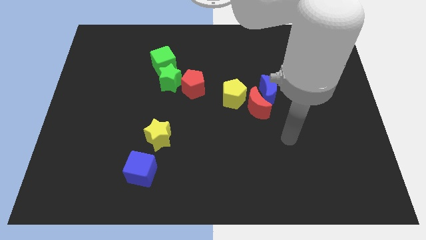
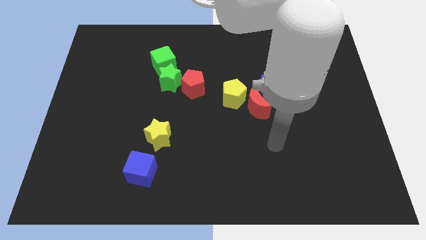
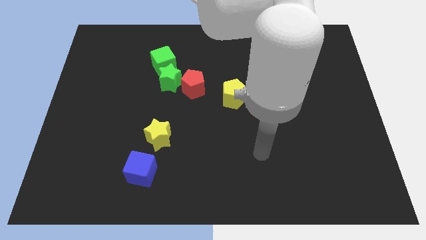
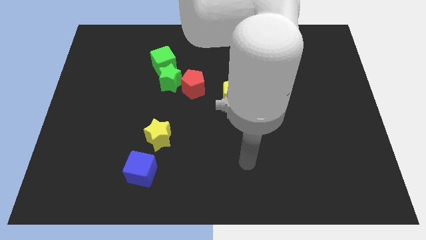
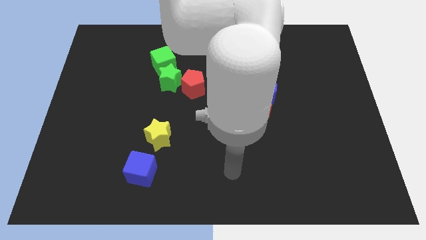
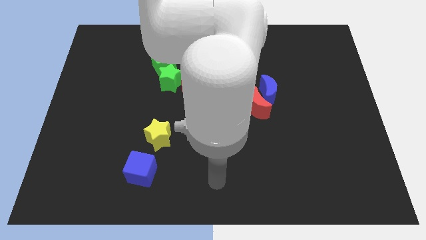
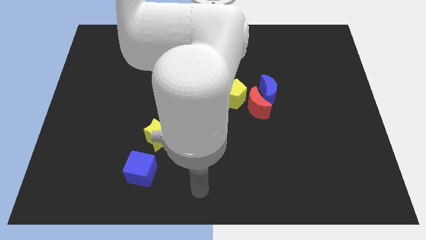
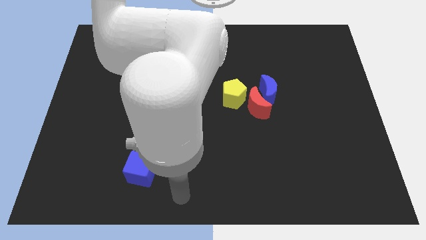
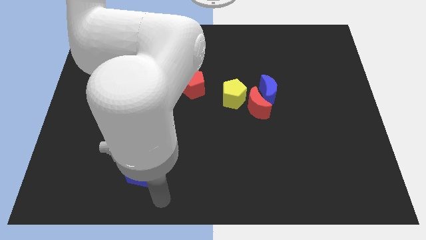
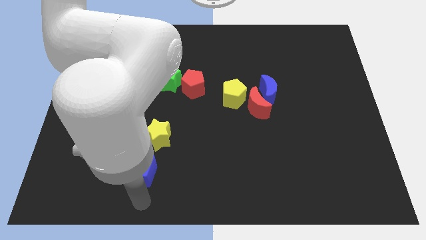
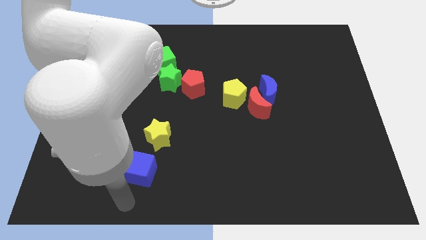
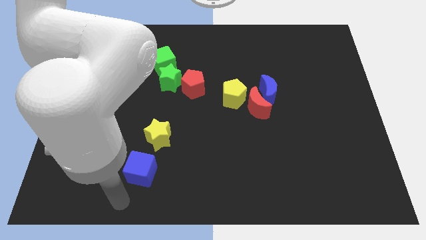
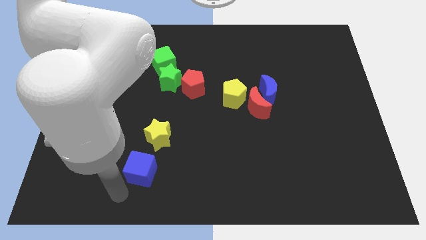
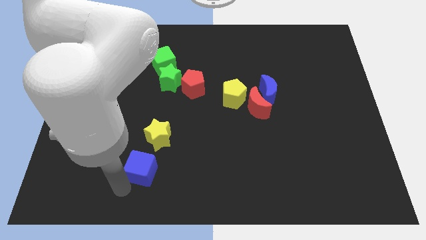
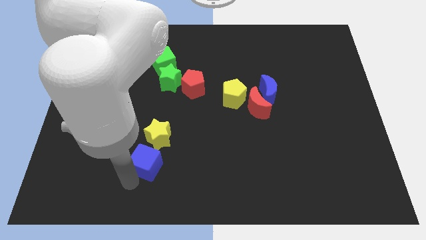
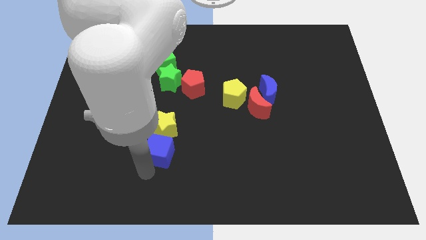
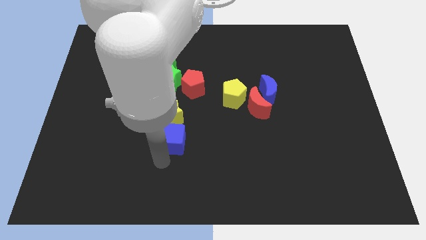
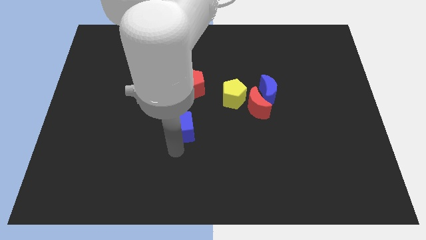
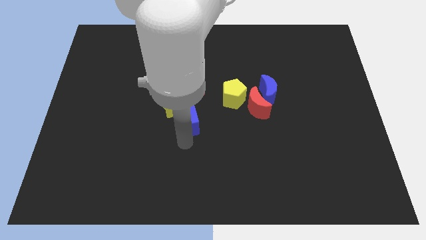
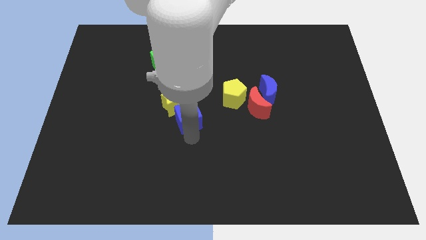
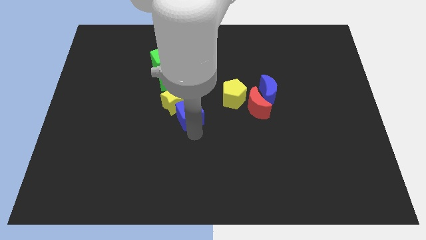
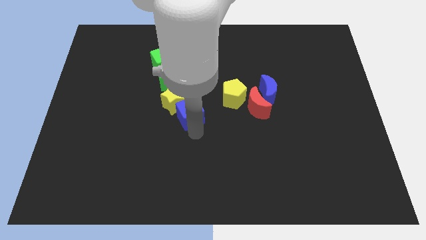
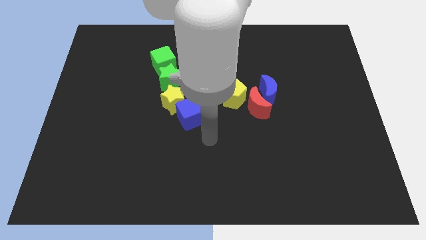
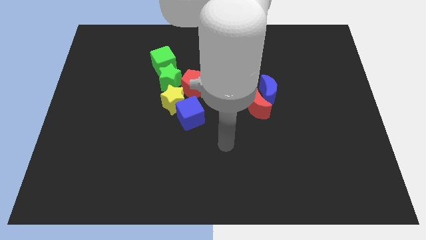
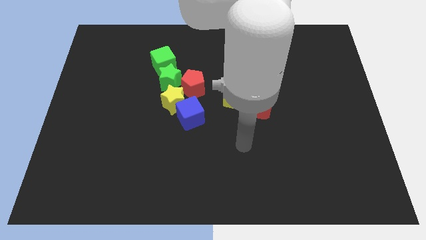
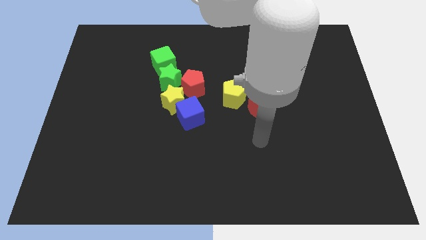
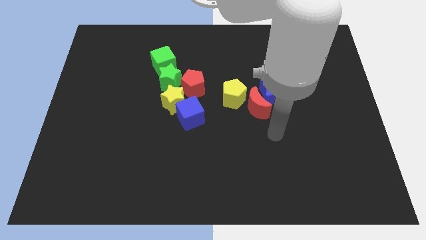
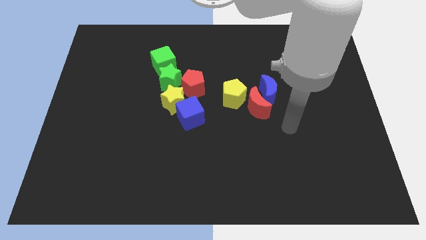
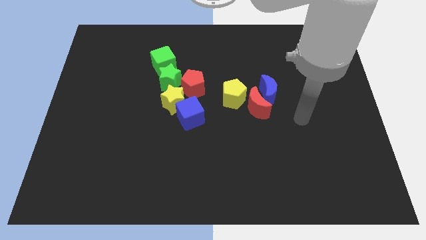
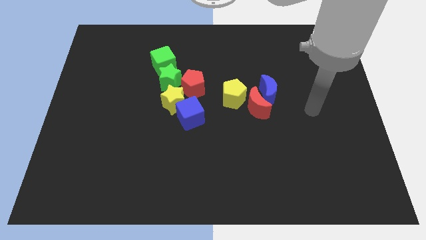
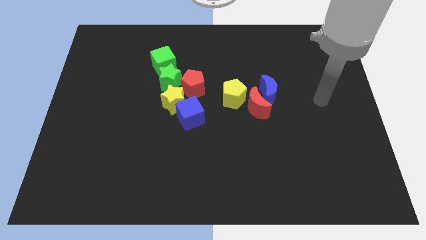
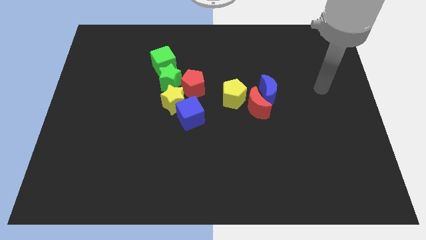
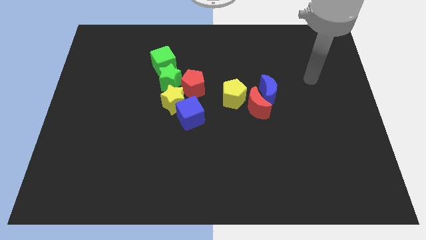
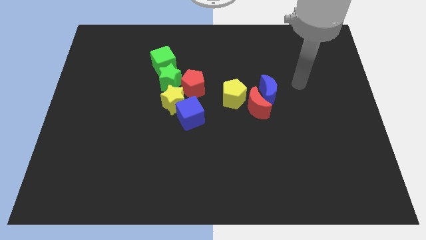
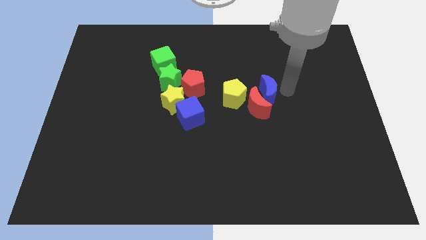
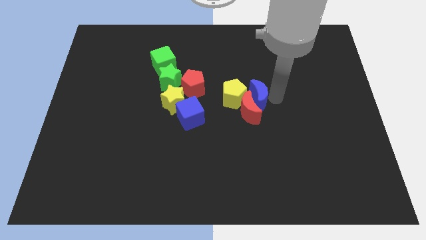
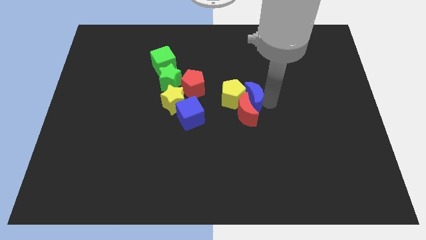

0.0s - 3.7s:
move the blue cube to the bottom of the yellow star

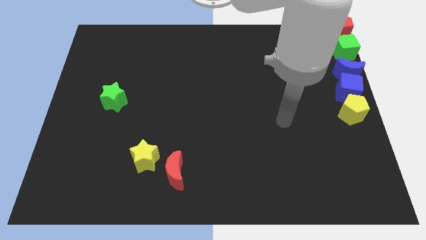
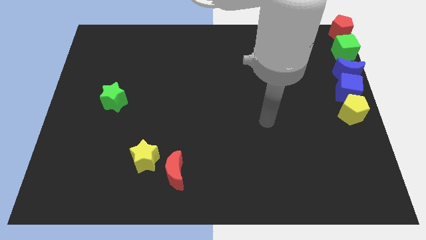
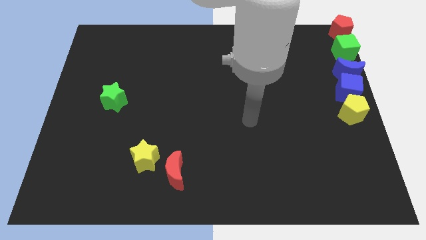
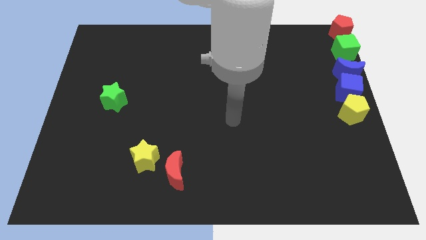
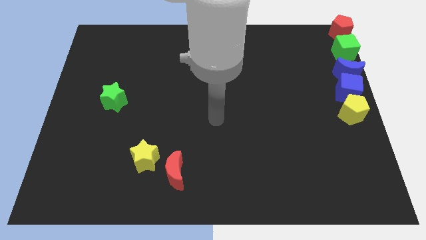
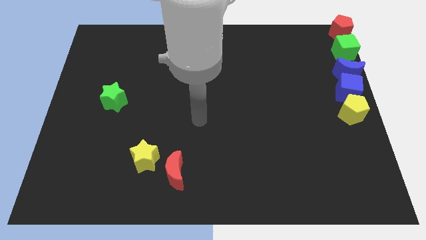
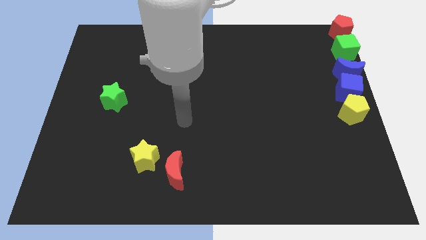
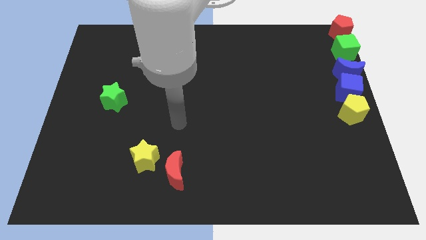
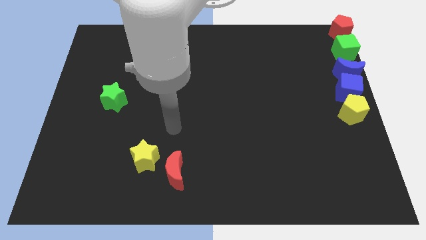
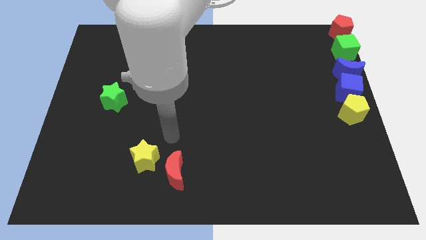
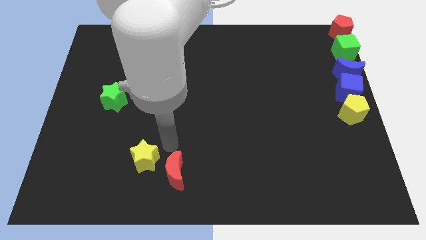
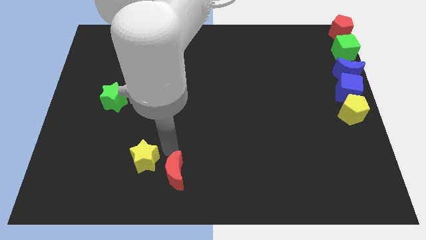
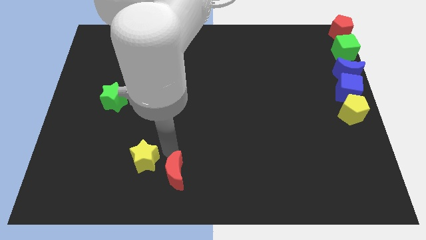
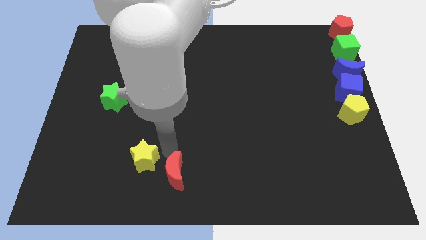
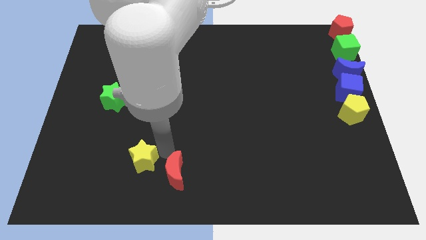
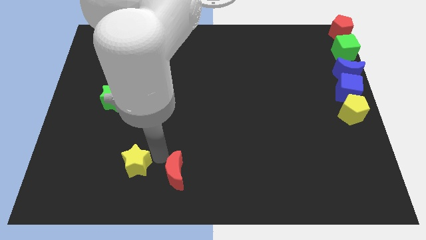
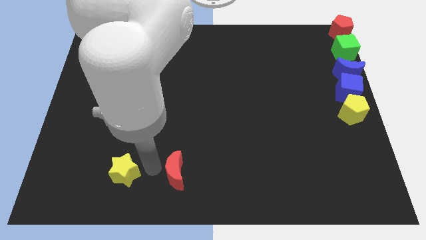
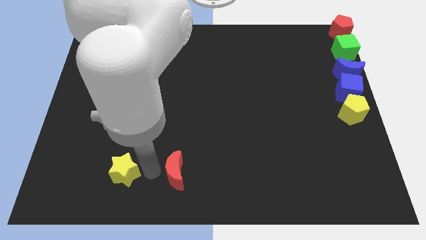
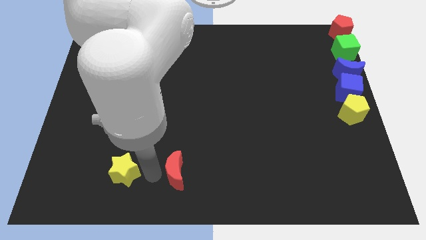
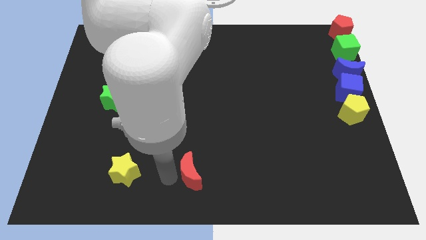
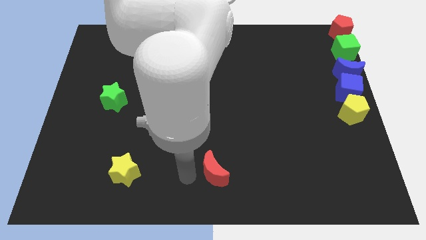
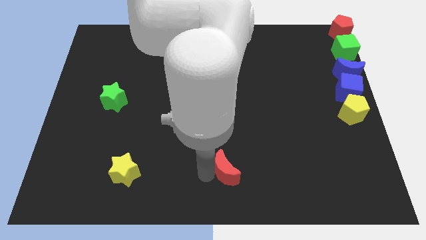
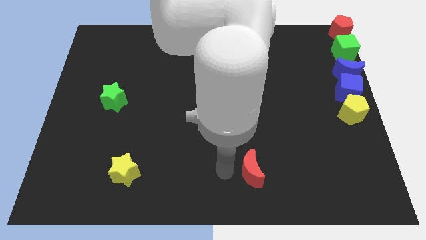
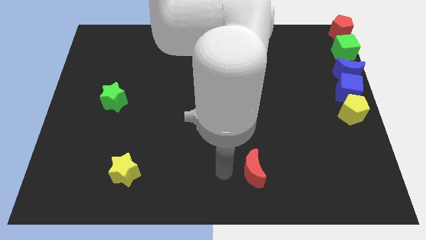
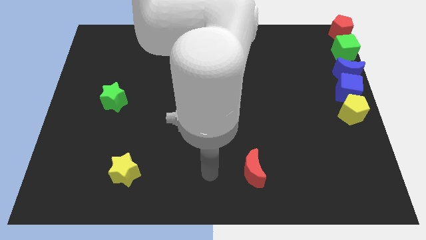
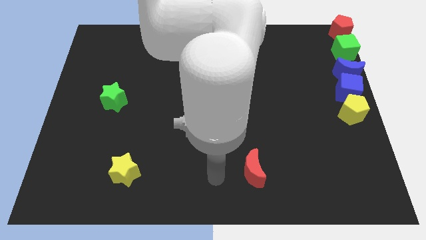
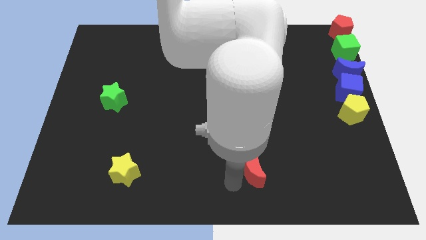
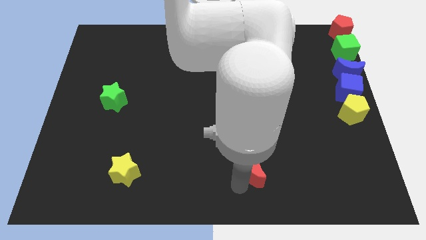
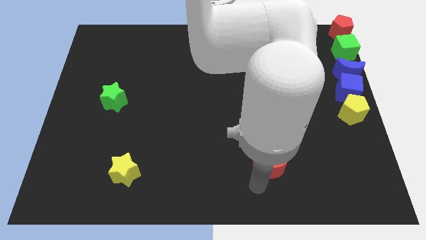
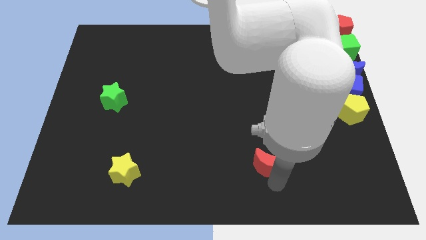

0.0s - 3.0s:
move the red moon slightly to the right of the board

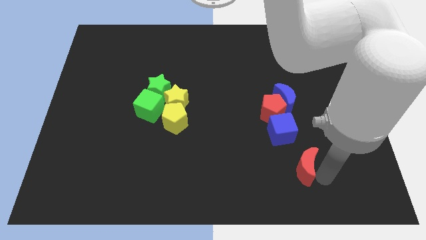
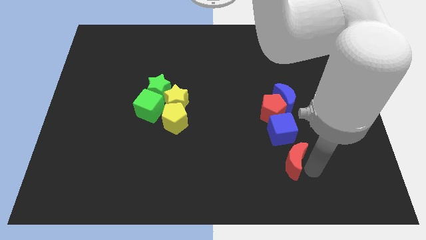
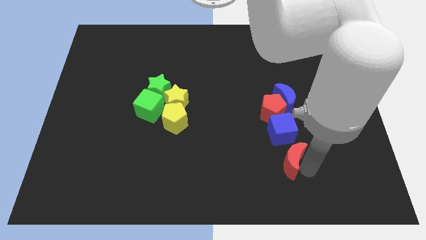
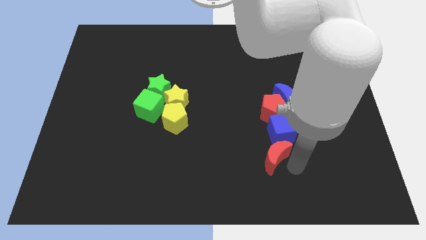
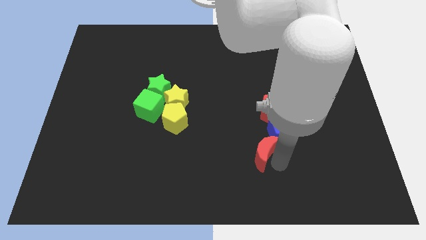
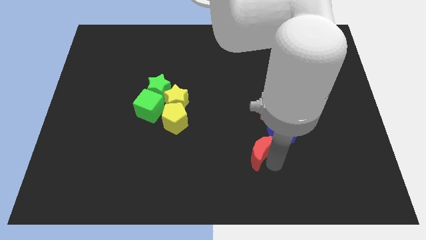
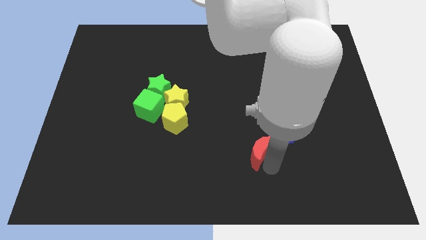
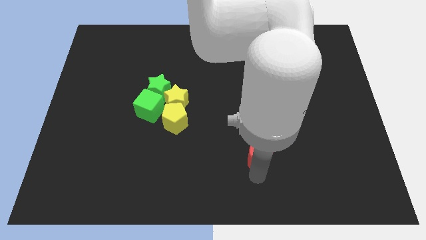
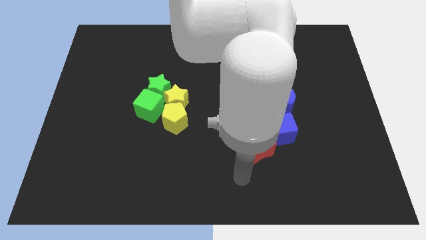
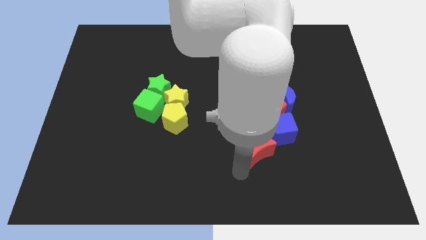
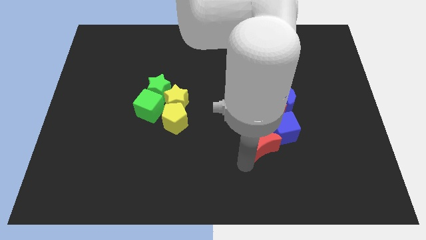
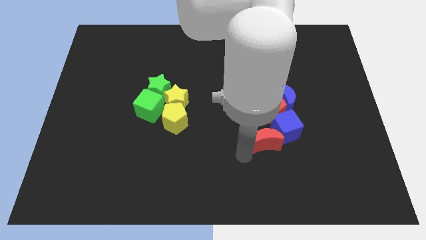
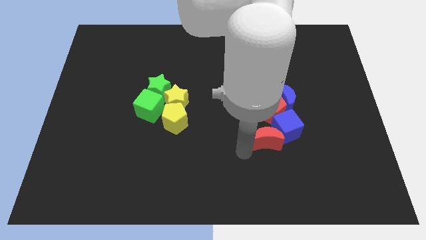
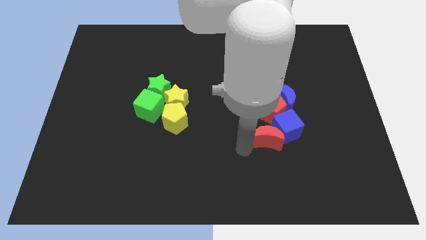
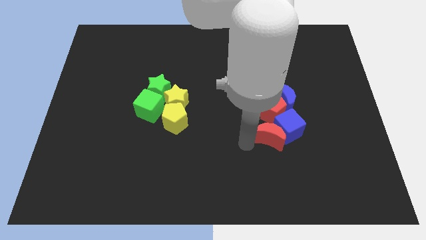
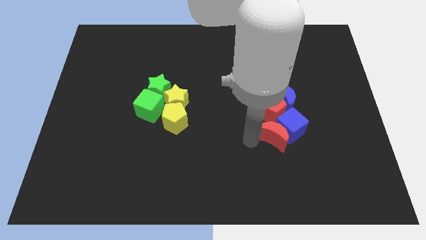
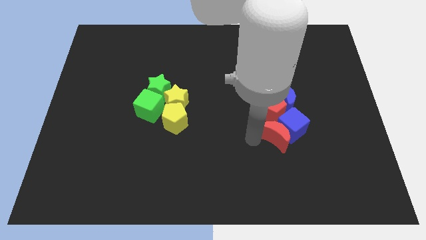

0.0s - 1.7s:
push the red crescent to the bottom left side of the blue cube

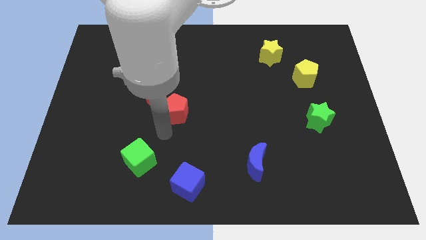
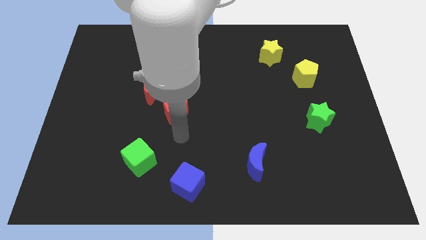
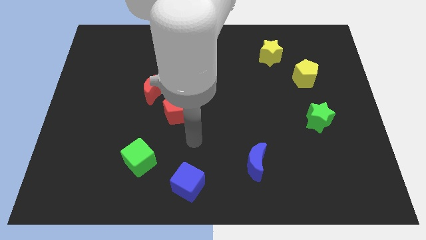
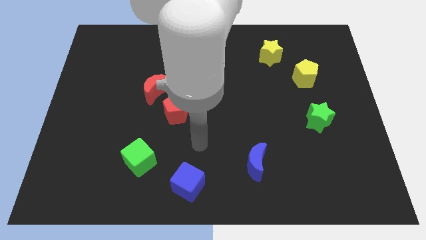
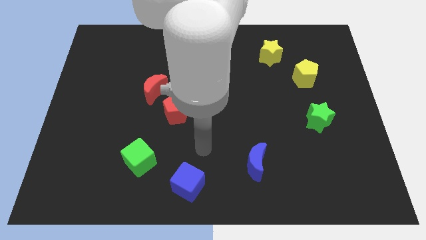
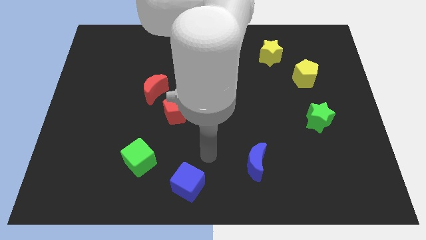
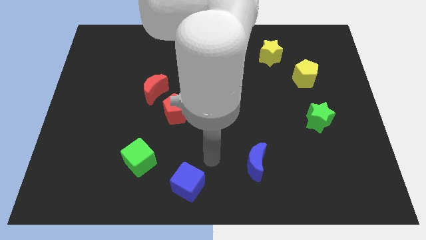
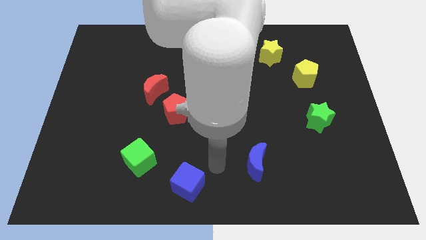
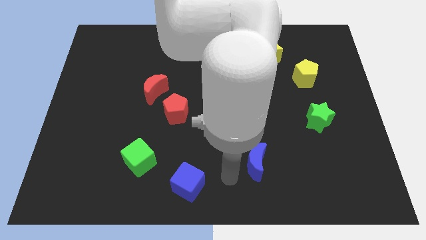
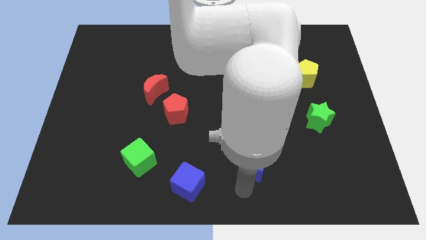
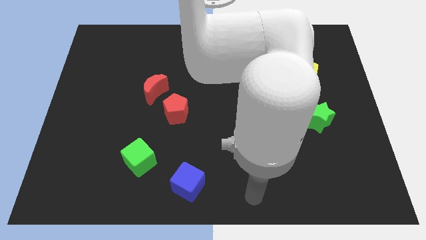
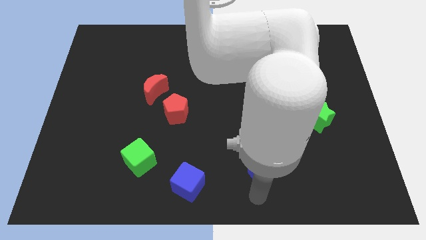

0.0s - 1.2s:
move your hand below the blue crescent
